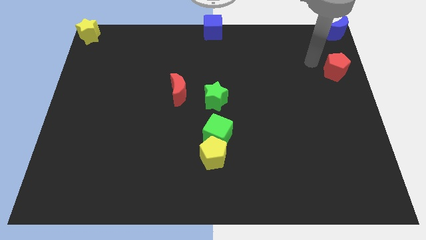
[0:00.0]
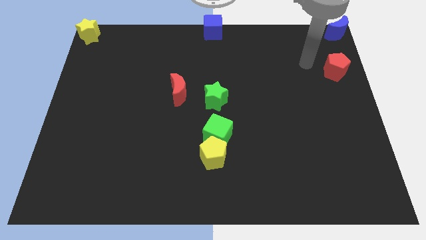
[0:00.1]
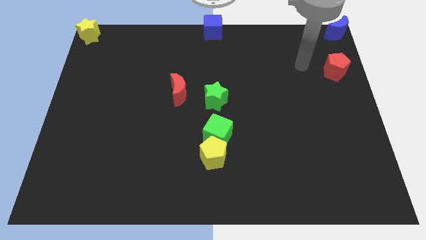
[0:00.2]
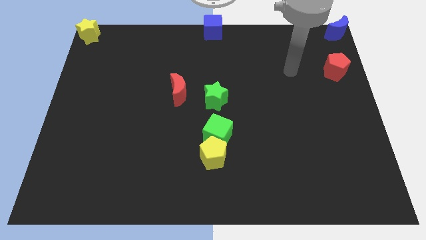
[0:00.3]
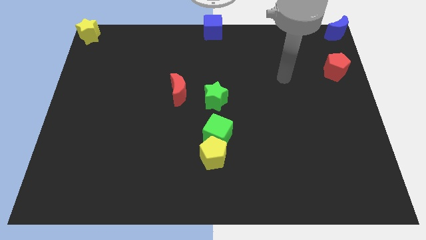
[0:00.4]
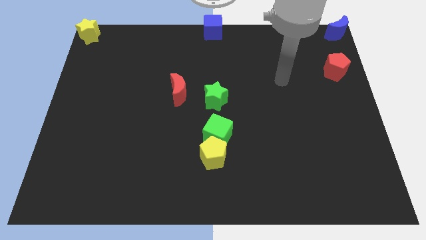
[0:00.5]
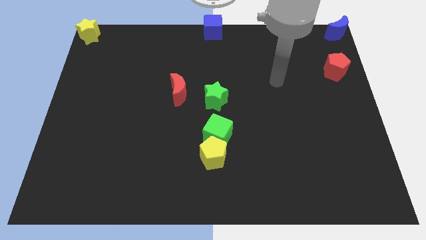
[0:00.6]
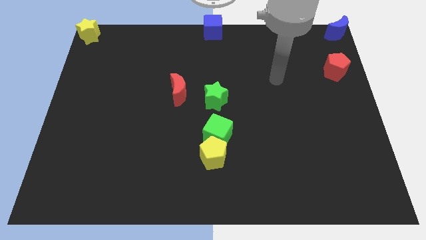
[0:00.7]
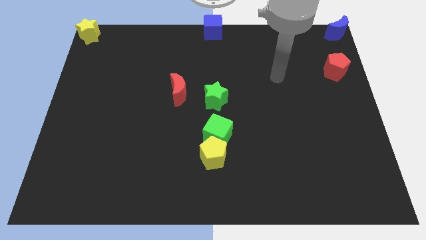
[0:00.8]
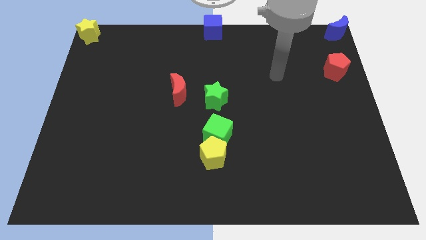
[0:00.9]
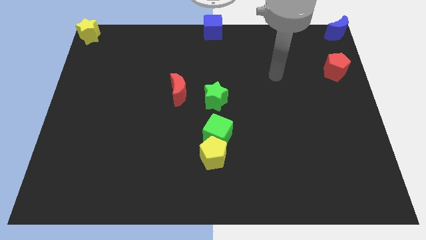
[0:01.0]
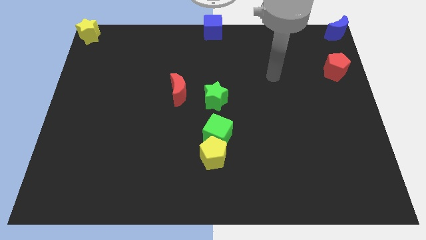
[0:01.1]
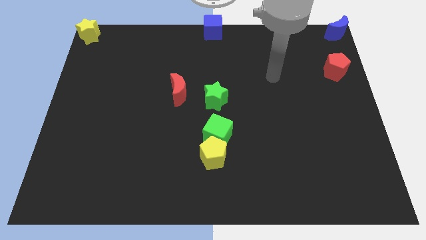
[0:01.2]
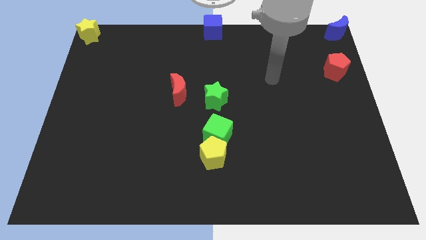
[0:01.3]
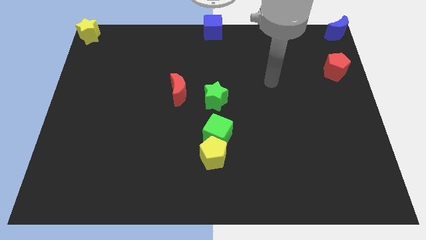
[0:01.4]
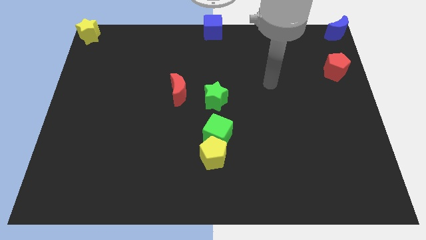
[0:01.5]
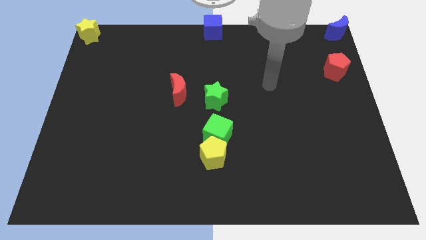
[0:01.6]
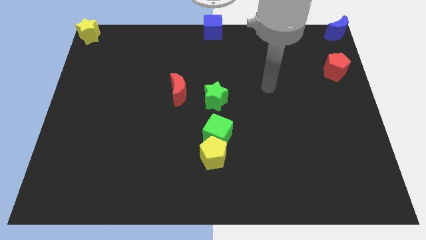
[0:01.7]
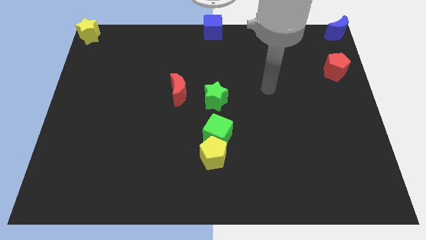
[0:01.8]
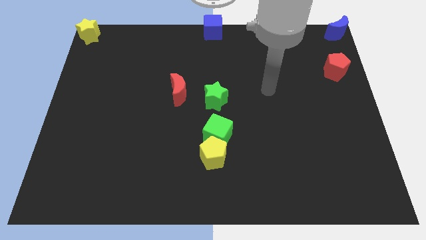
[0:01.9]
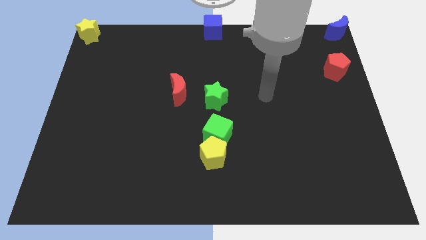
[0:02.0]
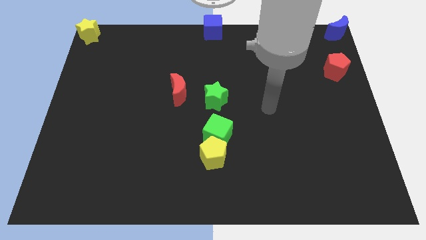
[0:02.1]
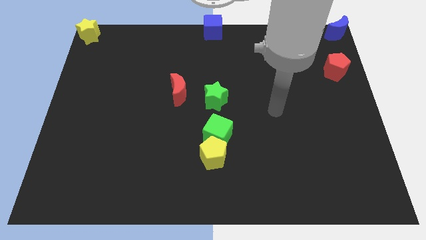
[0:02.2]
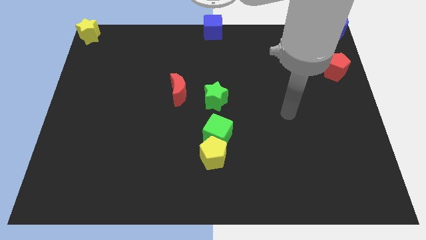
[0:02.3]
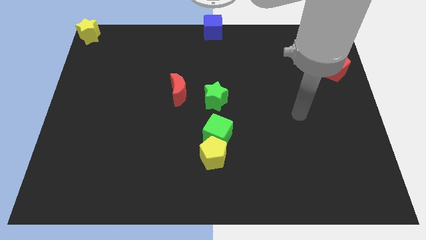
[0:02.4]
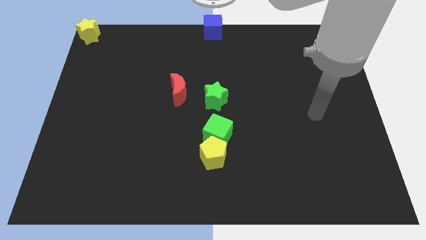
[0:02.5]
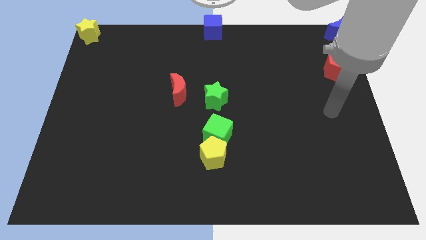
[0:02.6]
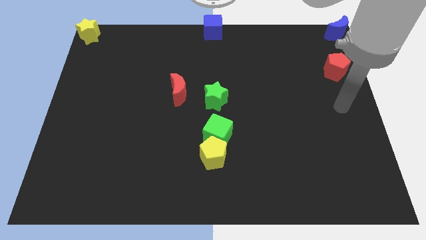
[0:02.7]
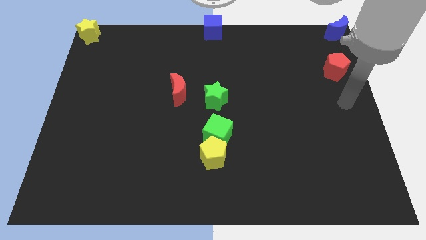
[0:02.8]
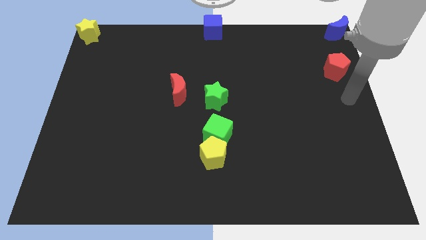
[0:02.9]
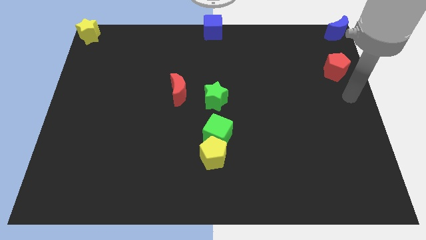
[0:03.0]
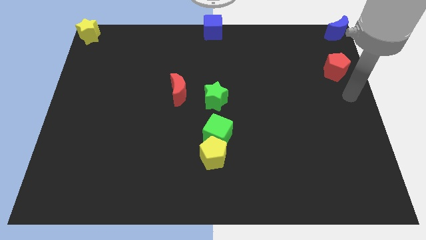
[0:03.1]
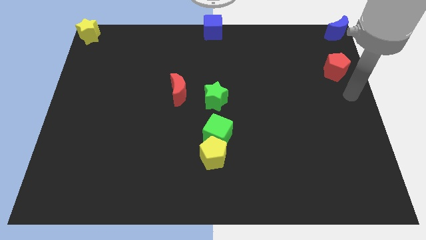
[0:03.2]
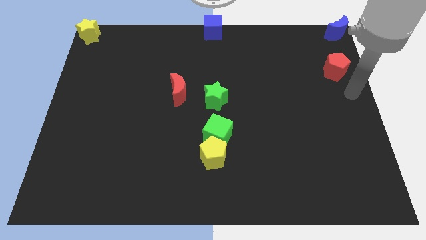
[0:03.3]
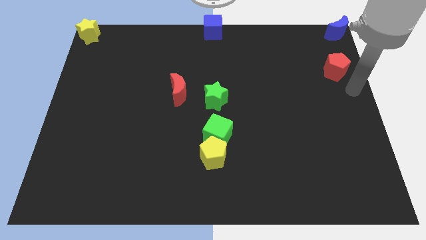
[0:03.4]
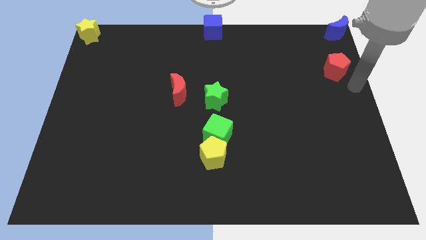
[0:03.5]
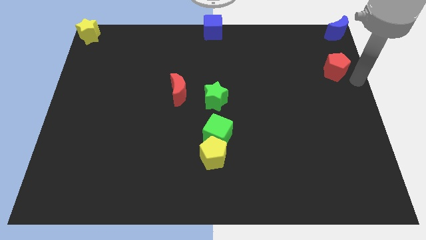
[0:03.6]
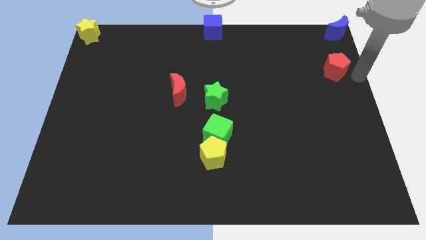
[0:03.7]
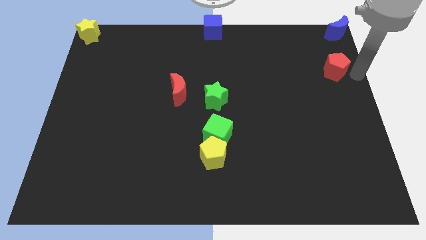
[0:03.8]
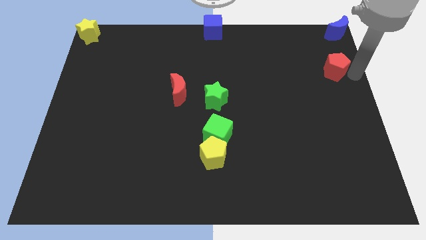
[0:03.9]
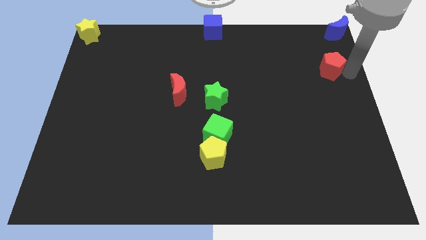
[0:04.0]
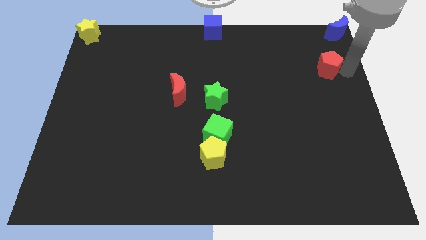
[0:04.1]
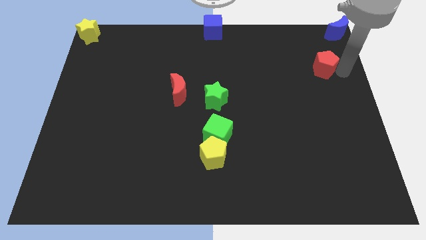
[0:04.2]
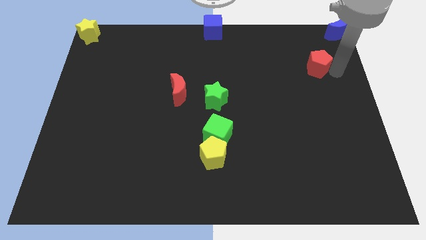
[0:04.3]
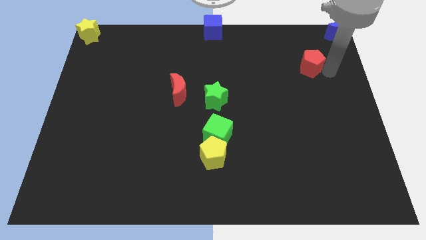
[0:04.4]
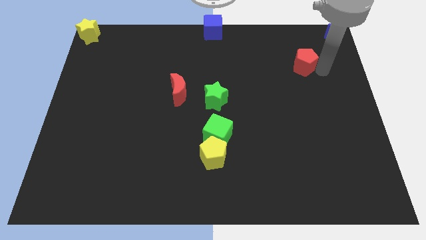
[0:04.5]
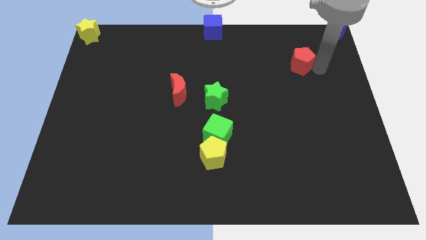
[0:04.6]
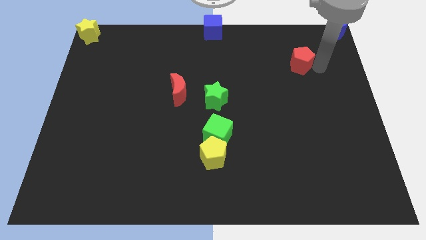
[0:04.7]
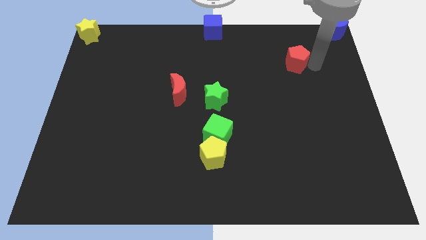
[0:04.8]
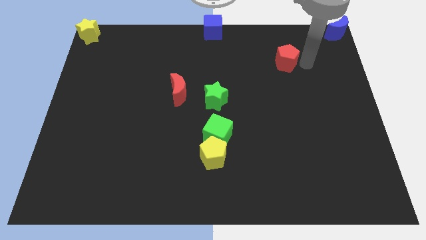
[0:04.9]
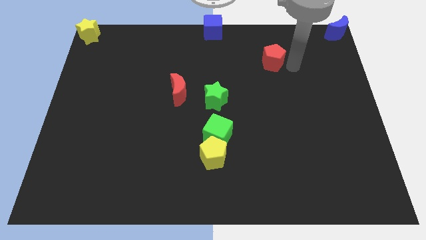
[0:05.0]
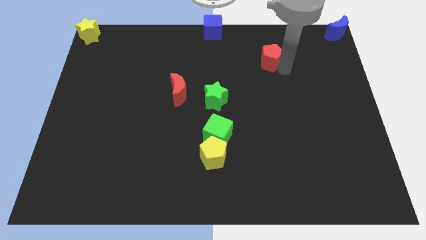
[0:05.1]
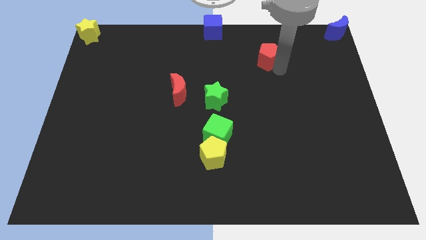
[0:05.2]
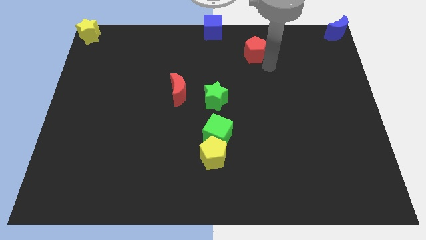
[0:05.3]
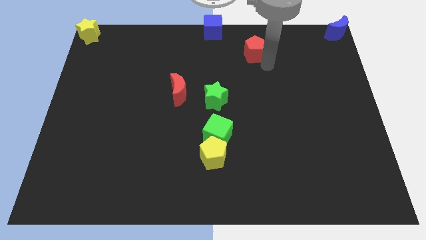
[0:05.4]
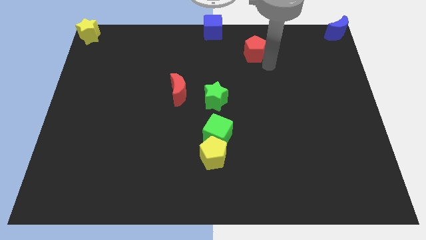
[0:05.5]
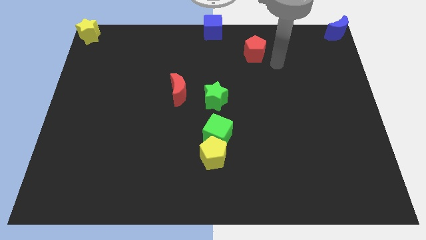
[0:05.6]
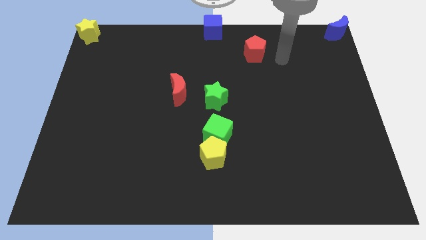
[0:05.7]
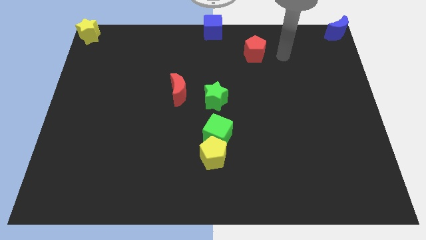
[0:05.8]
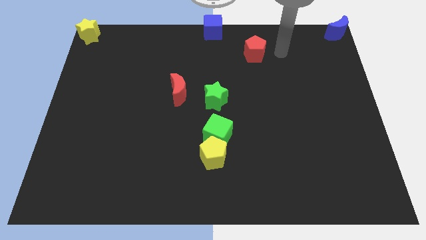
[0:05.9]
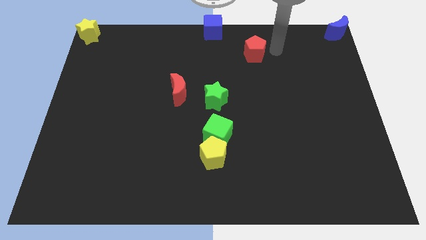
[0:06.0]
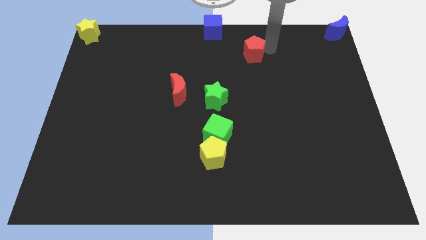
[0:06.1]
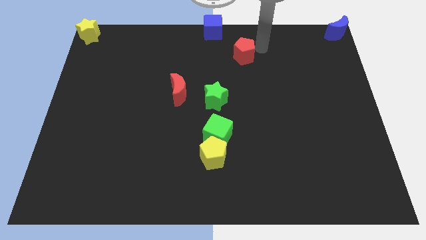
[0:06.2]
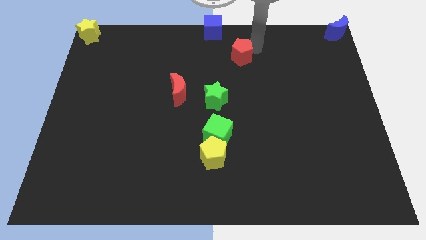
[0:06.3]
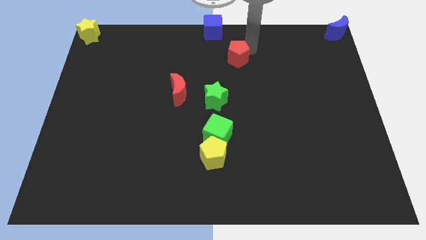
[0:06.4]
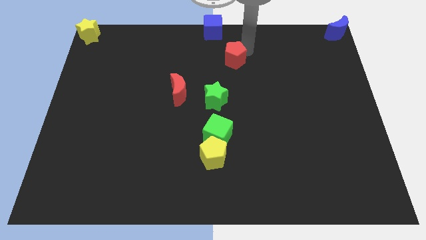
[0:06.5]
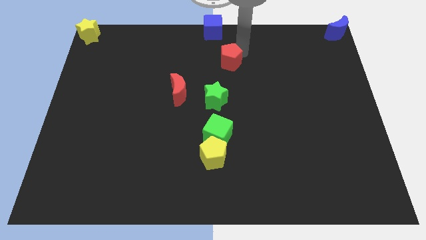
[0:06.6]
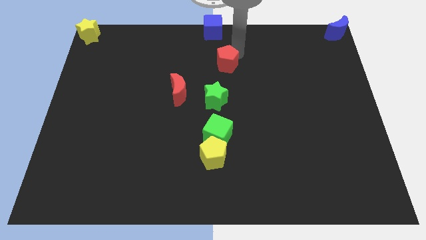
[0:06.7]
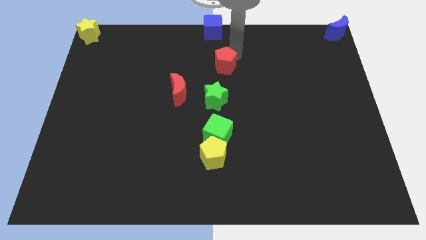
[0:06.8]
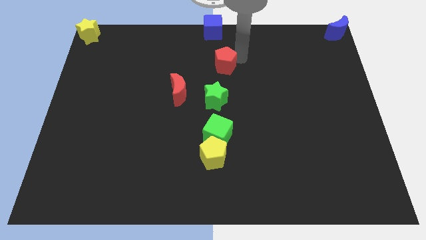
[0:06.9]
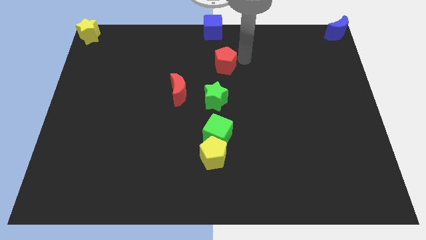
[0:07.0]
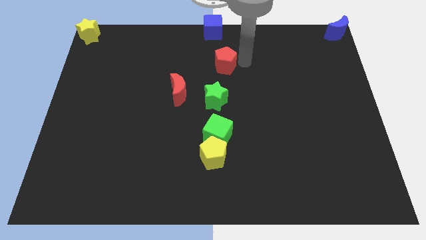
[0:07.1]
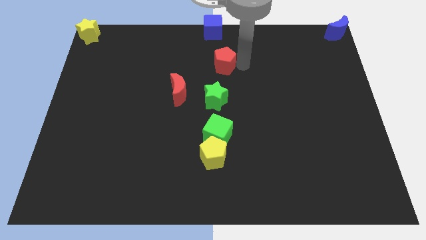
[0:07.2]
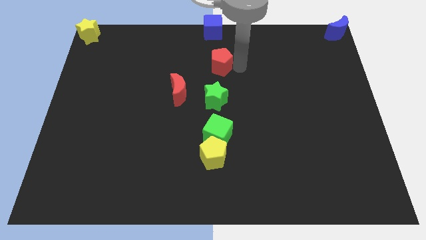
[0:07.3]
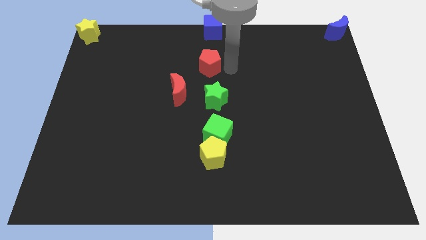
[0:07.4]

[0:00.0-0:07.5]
push the red pentagon in between the green star and blue cube

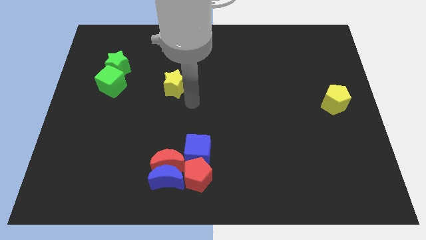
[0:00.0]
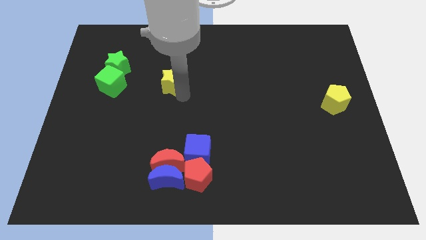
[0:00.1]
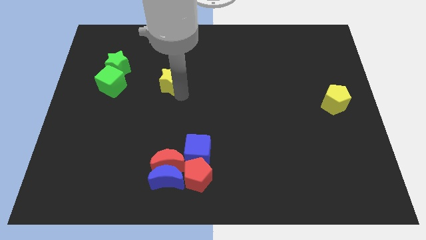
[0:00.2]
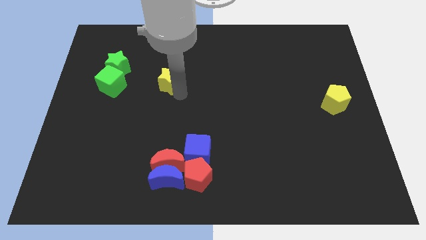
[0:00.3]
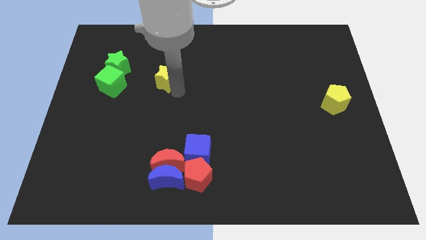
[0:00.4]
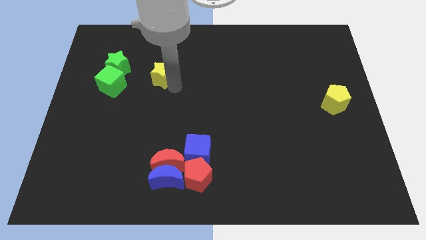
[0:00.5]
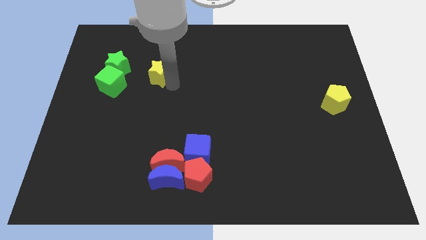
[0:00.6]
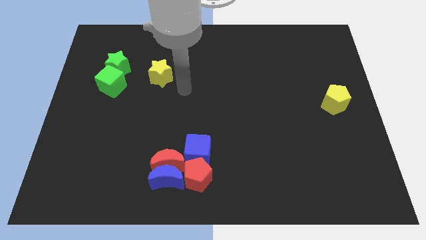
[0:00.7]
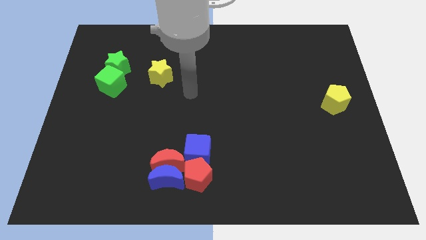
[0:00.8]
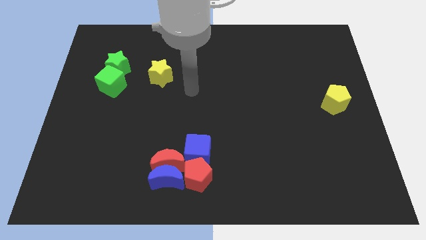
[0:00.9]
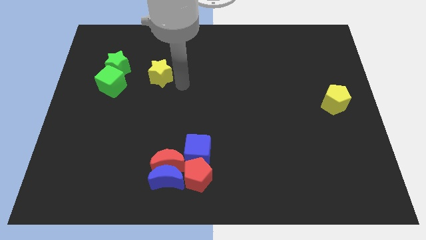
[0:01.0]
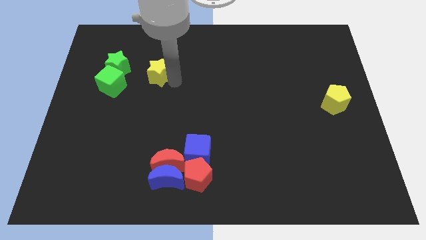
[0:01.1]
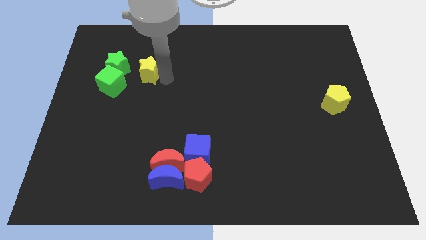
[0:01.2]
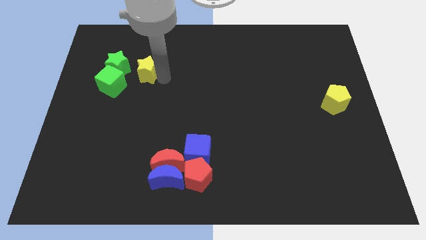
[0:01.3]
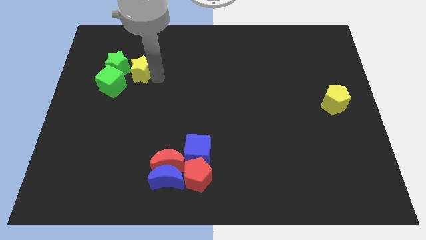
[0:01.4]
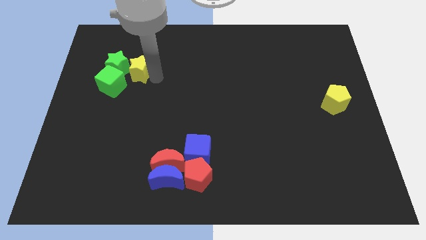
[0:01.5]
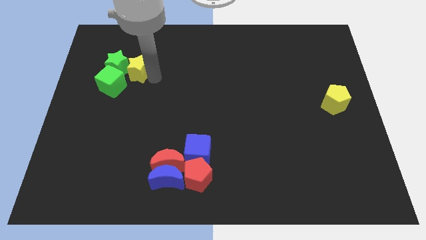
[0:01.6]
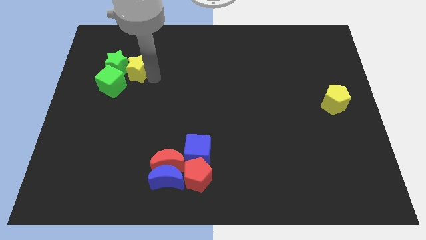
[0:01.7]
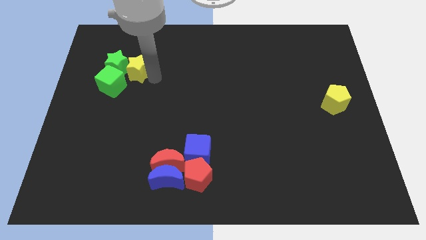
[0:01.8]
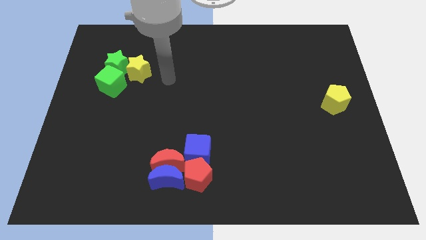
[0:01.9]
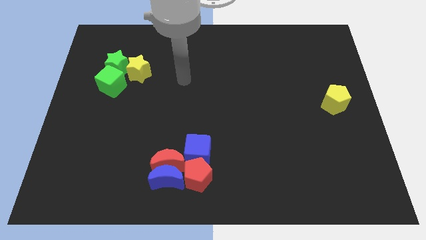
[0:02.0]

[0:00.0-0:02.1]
push the yellow star to the right side of the green star
